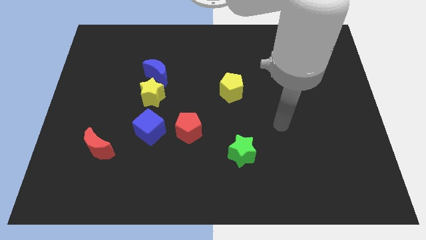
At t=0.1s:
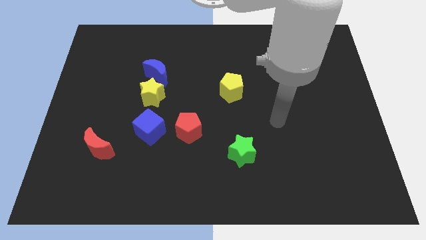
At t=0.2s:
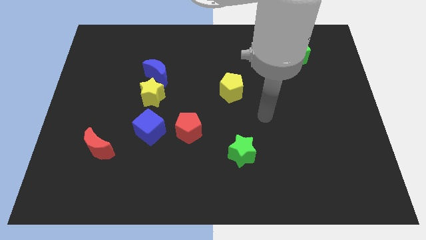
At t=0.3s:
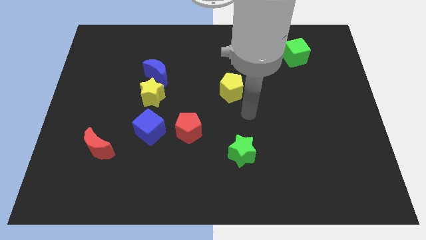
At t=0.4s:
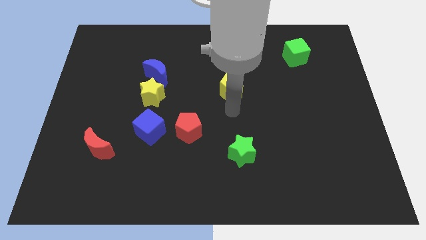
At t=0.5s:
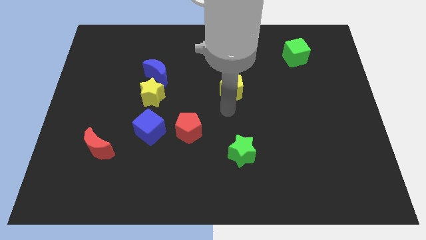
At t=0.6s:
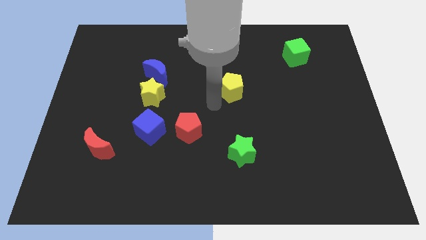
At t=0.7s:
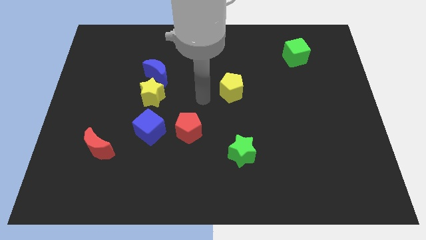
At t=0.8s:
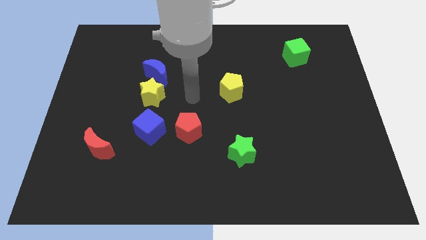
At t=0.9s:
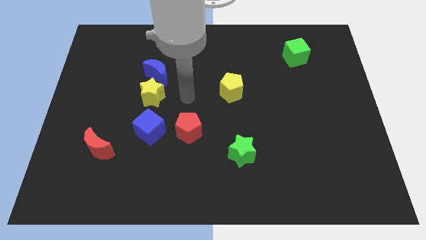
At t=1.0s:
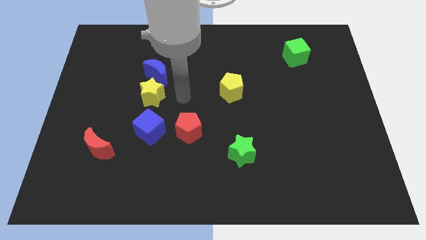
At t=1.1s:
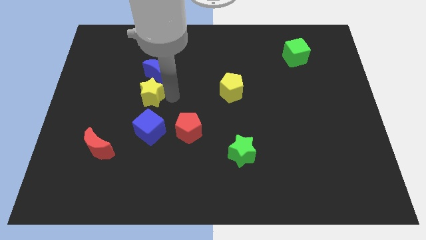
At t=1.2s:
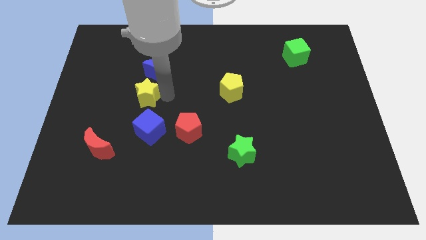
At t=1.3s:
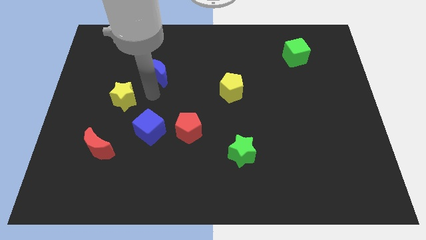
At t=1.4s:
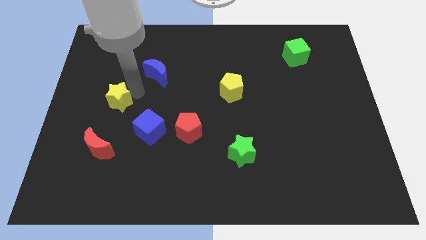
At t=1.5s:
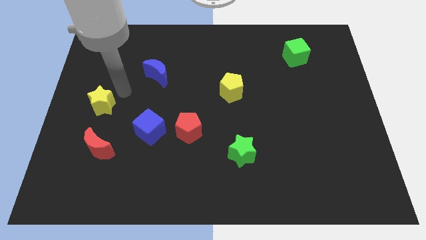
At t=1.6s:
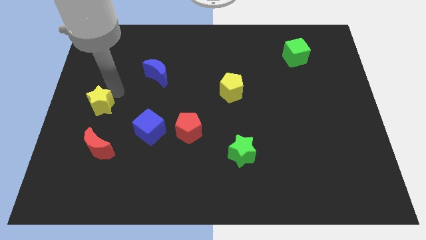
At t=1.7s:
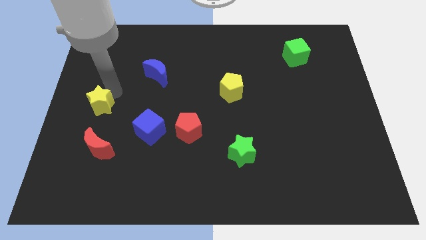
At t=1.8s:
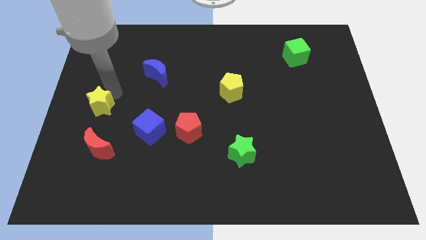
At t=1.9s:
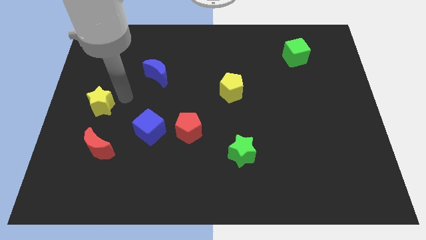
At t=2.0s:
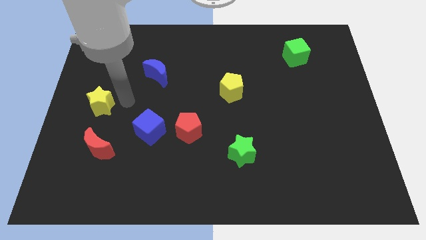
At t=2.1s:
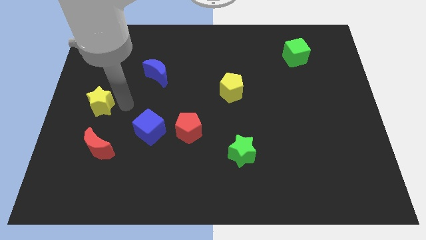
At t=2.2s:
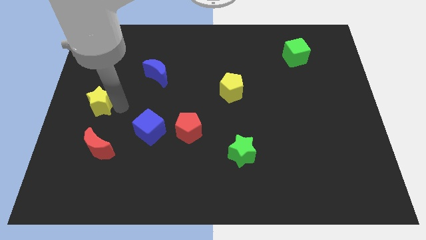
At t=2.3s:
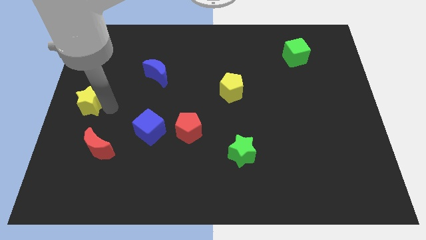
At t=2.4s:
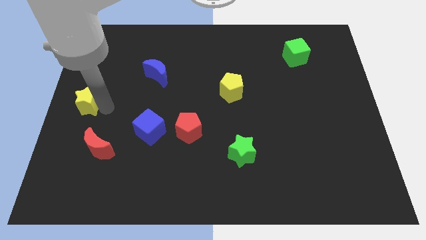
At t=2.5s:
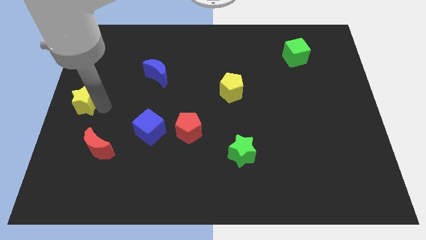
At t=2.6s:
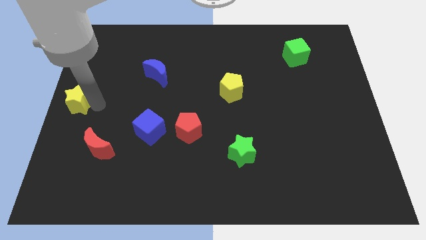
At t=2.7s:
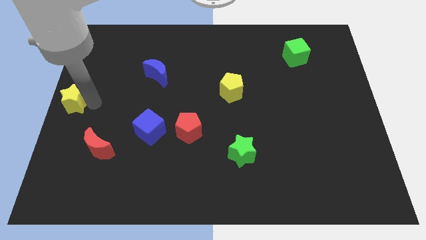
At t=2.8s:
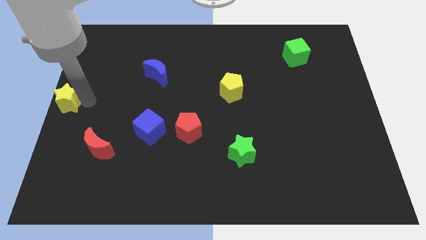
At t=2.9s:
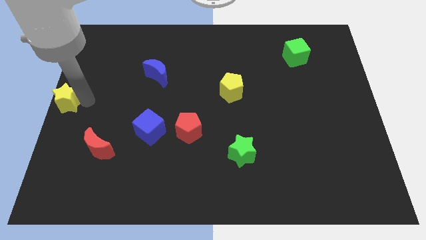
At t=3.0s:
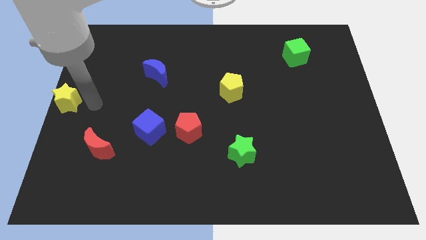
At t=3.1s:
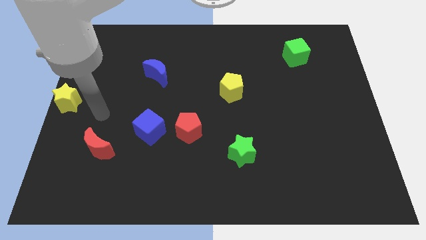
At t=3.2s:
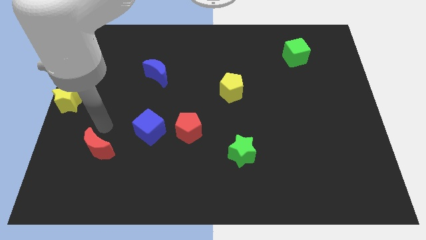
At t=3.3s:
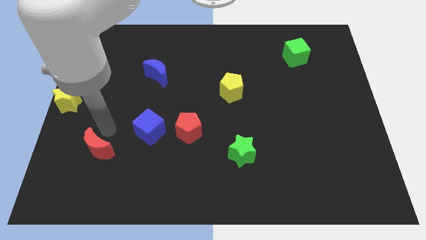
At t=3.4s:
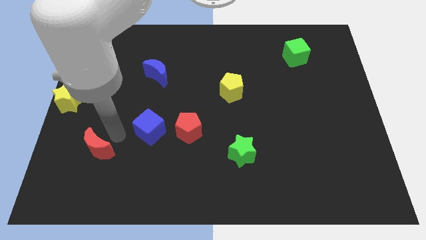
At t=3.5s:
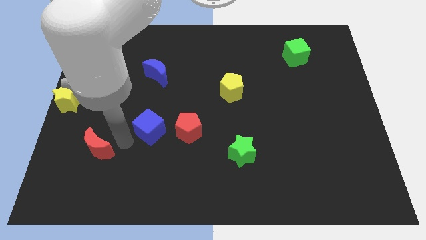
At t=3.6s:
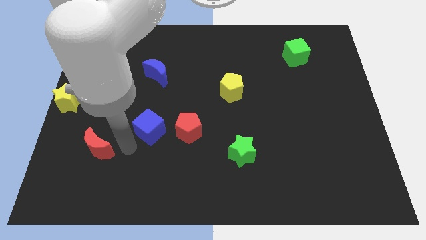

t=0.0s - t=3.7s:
slide the yellow star to the center left of the board

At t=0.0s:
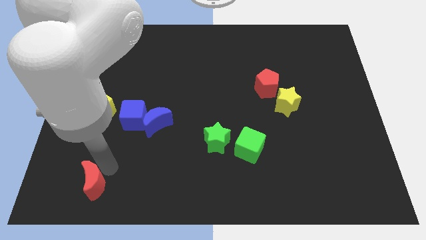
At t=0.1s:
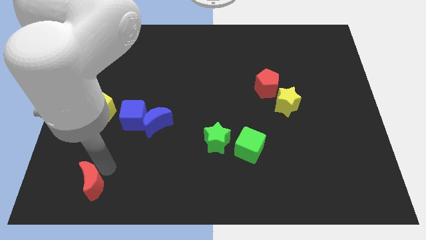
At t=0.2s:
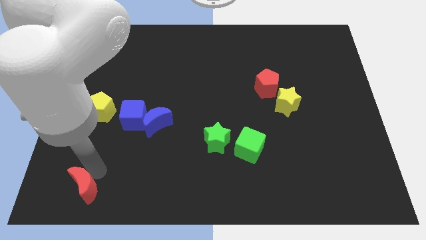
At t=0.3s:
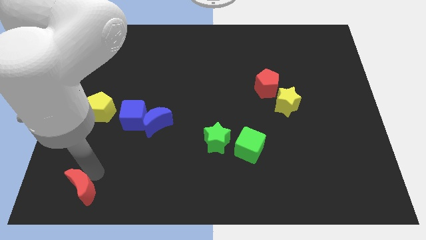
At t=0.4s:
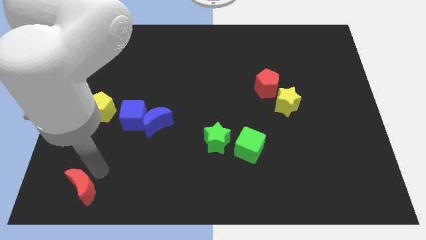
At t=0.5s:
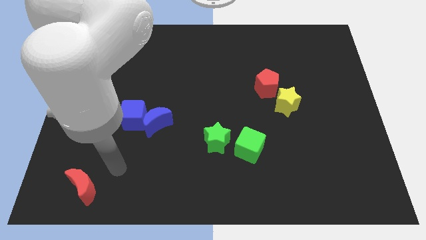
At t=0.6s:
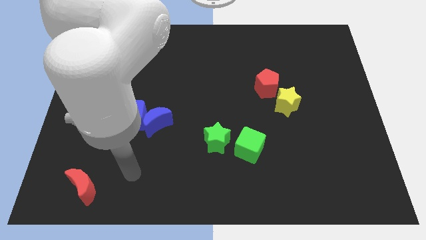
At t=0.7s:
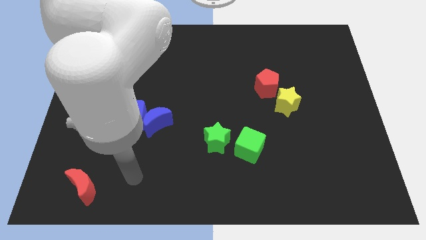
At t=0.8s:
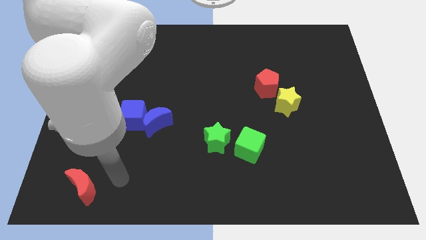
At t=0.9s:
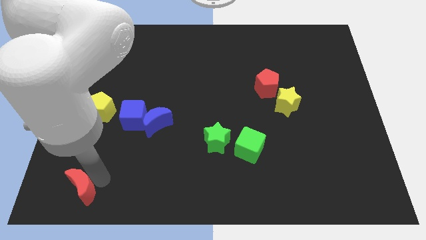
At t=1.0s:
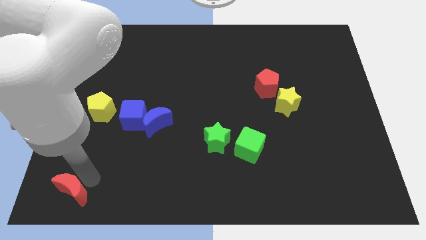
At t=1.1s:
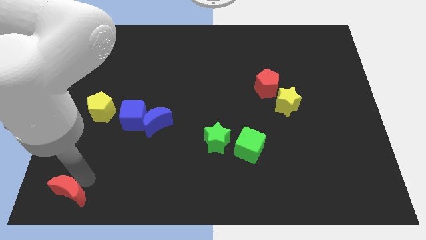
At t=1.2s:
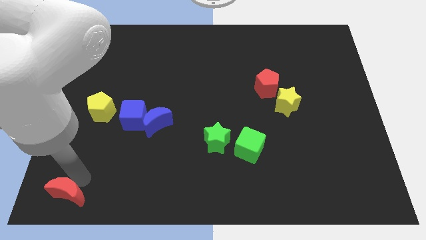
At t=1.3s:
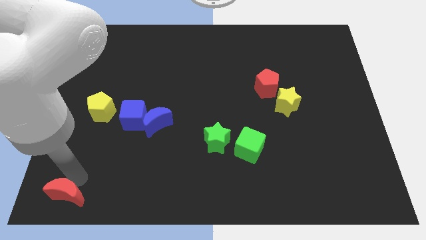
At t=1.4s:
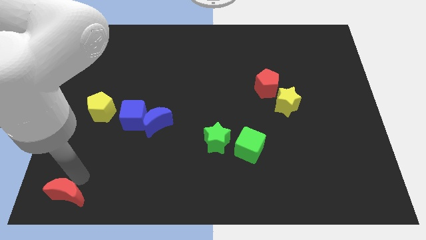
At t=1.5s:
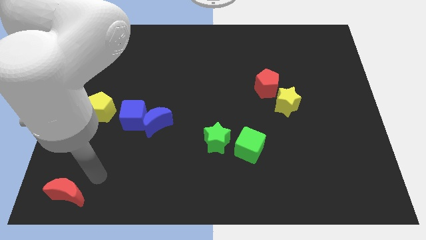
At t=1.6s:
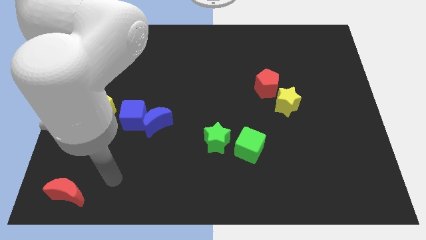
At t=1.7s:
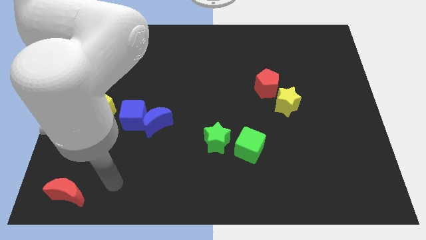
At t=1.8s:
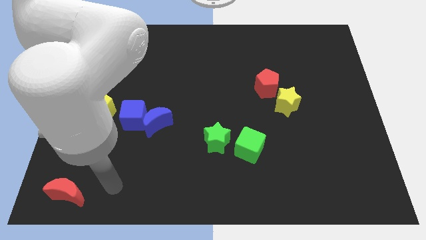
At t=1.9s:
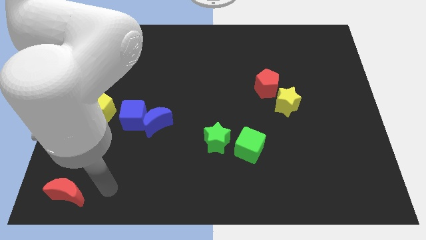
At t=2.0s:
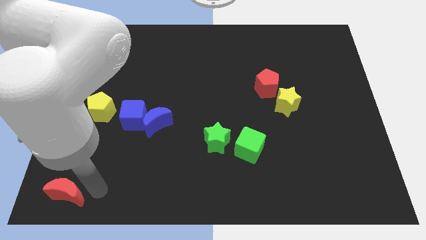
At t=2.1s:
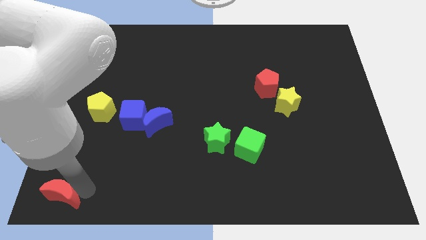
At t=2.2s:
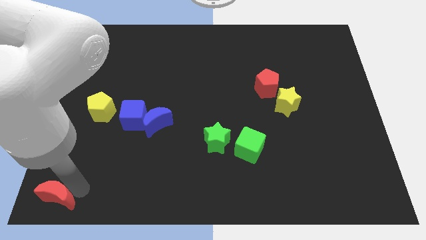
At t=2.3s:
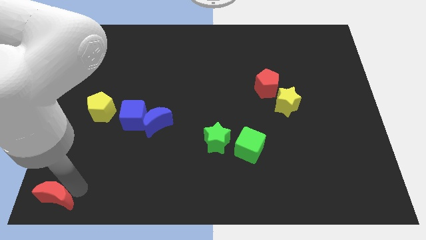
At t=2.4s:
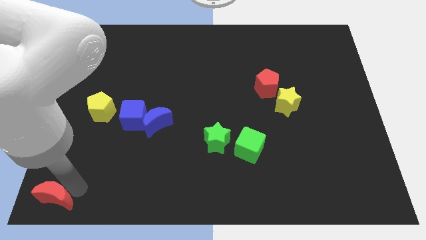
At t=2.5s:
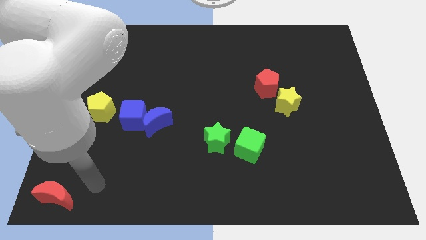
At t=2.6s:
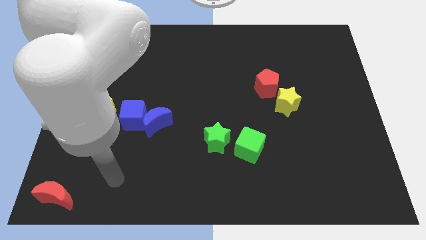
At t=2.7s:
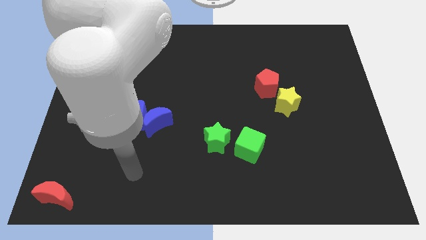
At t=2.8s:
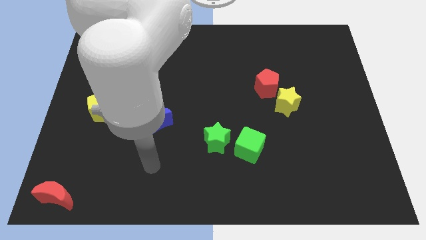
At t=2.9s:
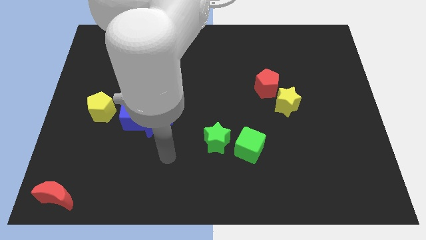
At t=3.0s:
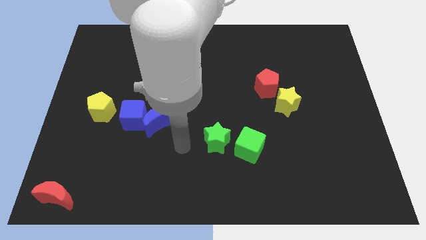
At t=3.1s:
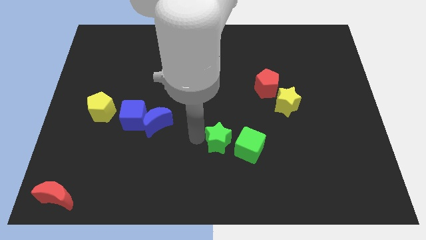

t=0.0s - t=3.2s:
place the red crescent to the bottom left corner of the board

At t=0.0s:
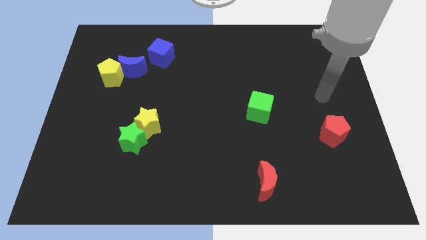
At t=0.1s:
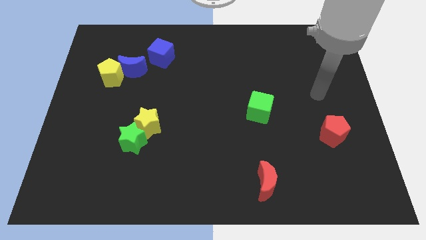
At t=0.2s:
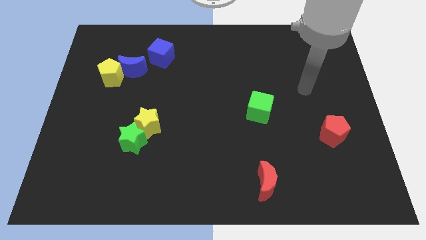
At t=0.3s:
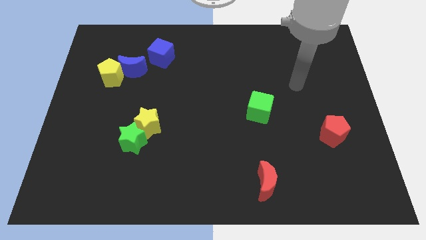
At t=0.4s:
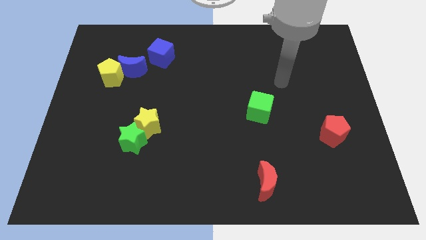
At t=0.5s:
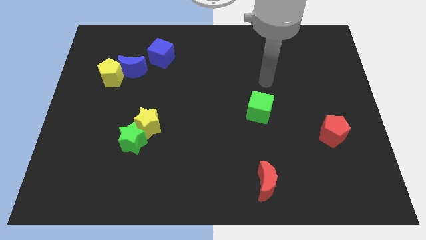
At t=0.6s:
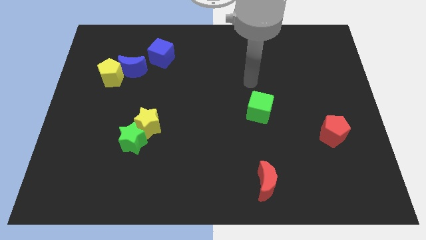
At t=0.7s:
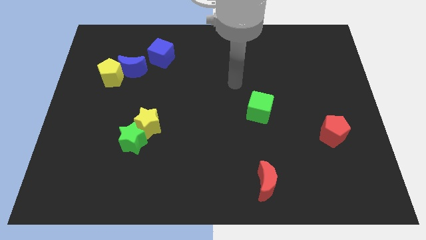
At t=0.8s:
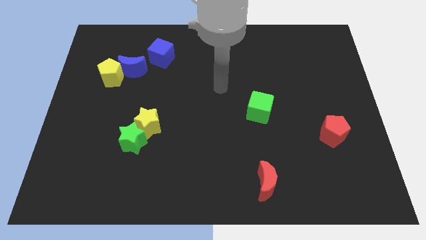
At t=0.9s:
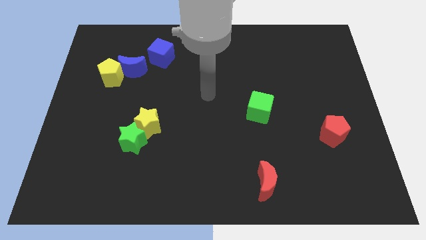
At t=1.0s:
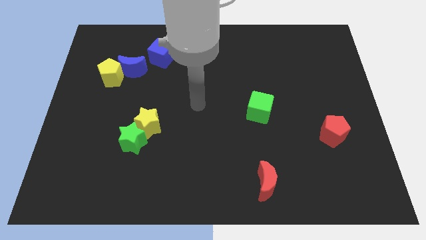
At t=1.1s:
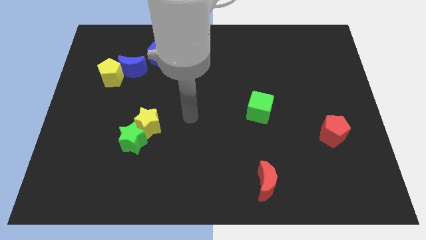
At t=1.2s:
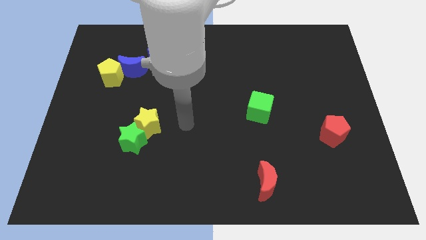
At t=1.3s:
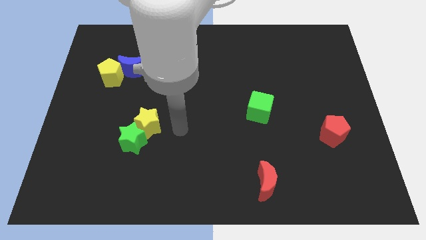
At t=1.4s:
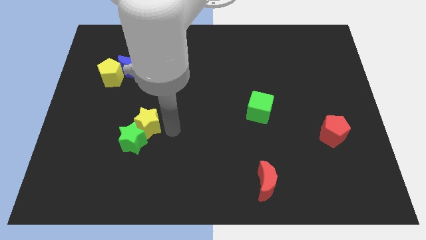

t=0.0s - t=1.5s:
move your arm to the right of the yellow star

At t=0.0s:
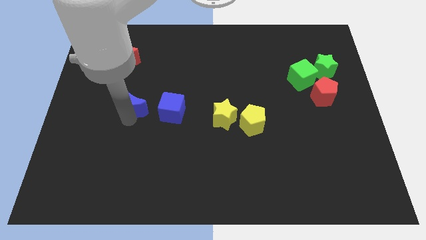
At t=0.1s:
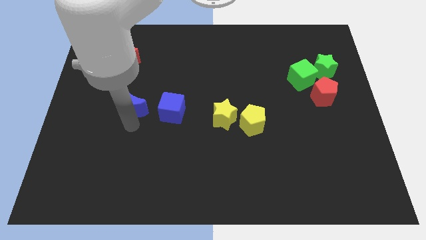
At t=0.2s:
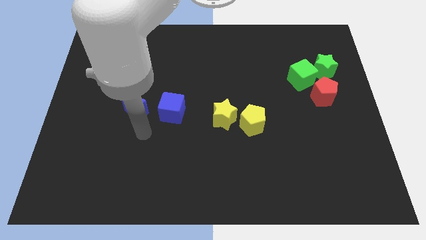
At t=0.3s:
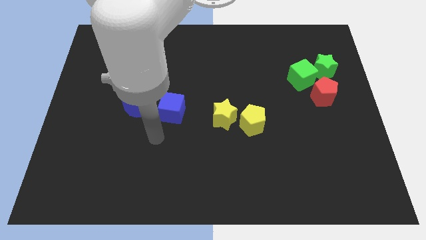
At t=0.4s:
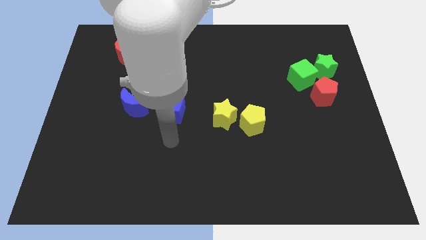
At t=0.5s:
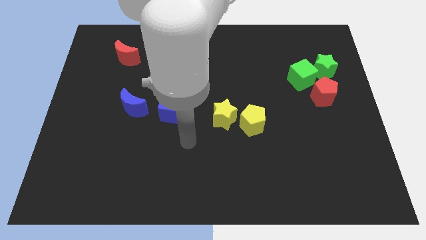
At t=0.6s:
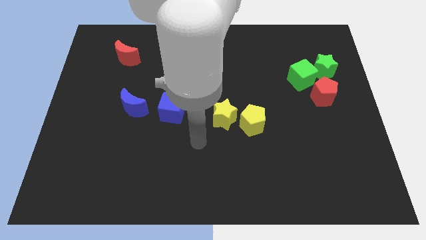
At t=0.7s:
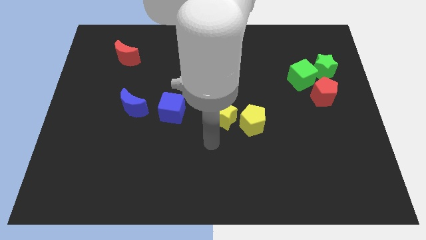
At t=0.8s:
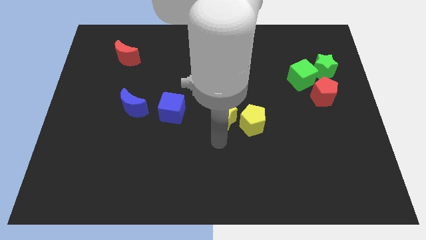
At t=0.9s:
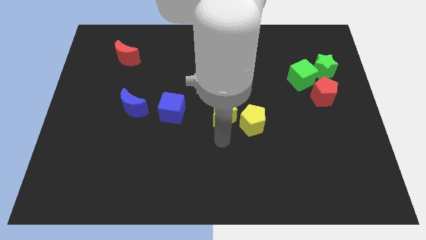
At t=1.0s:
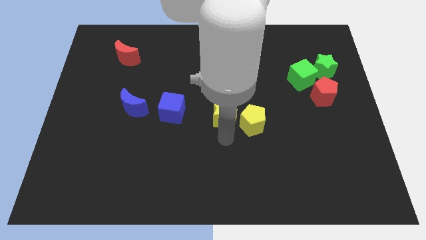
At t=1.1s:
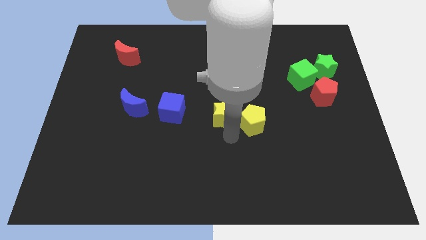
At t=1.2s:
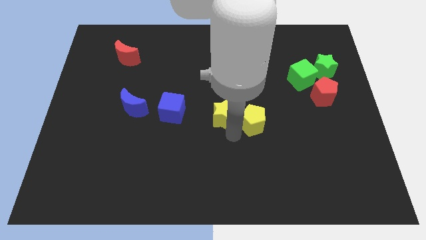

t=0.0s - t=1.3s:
move your arm away from blue crescent
